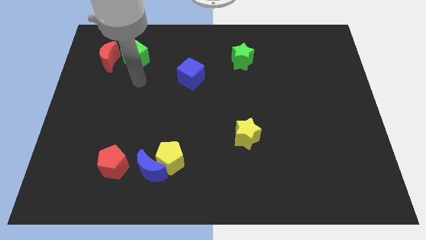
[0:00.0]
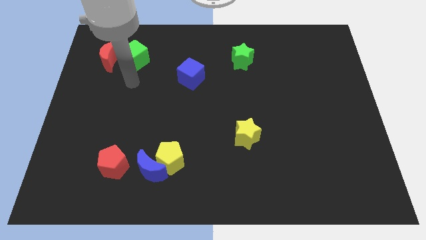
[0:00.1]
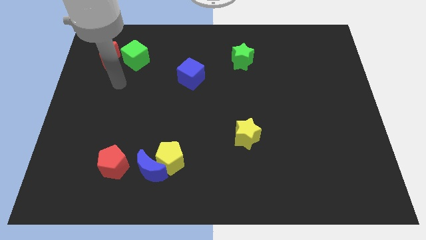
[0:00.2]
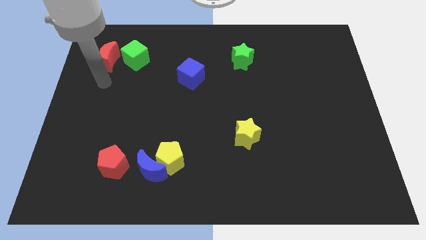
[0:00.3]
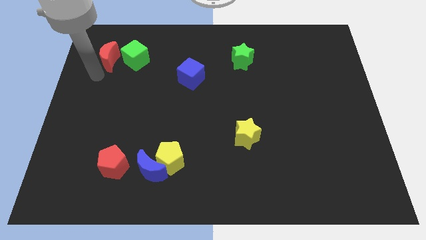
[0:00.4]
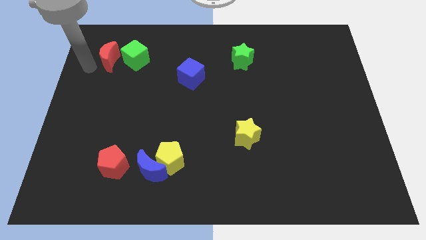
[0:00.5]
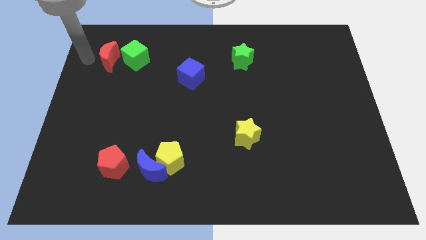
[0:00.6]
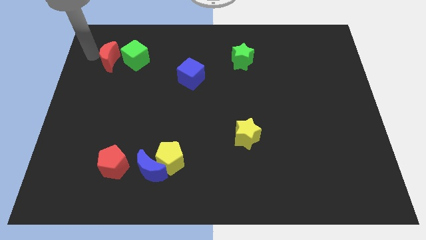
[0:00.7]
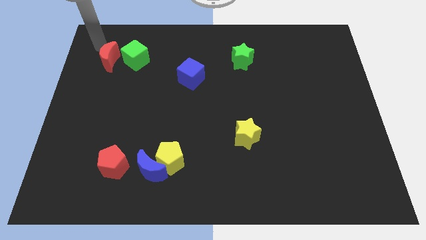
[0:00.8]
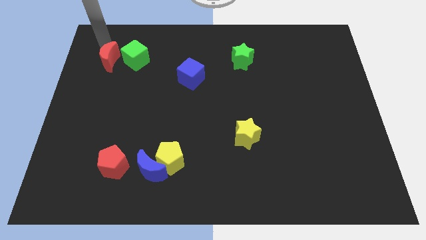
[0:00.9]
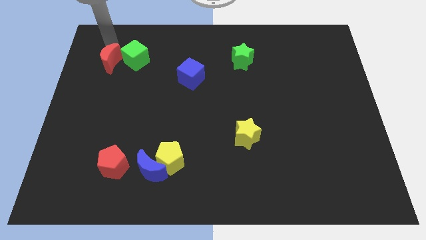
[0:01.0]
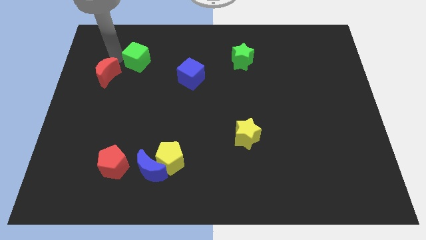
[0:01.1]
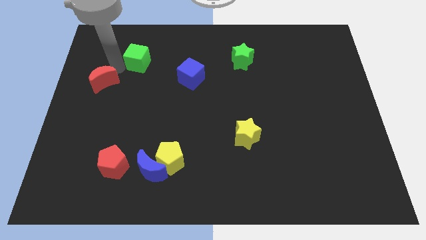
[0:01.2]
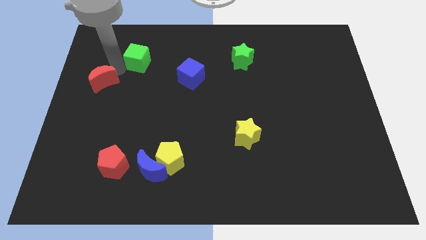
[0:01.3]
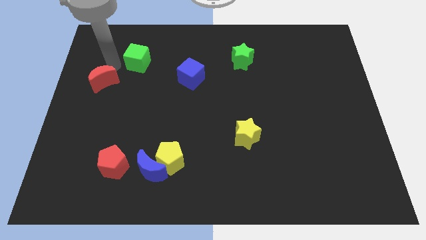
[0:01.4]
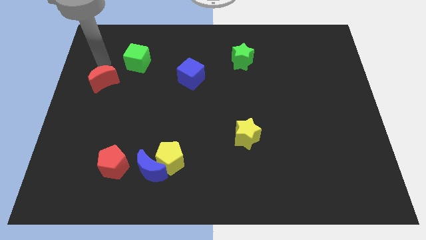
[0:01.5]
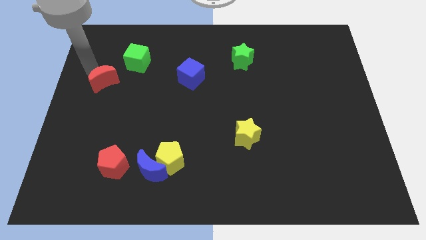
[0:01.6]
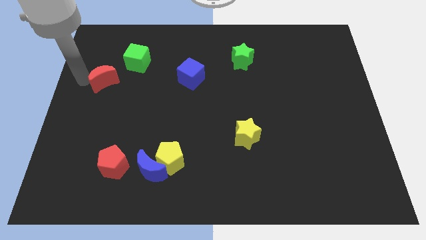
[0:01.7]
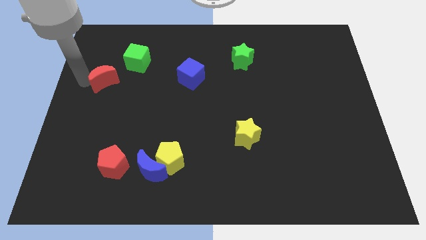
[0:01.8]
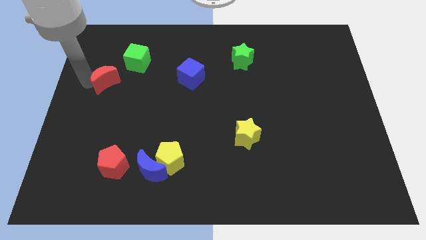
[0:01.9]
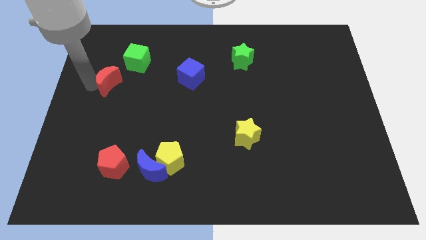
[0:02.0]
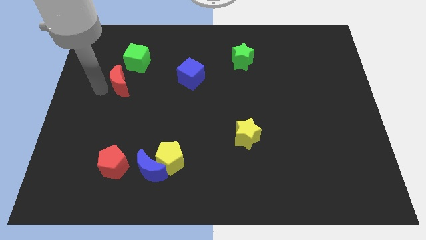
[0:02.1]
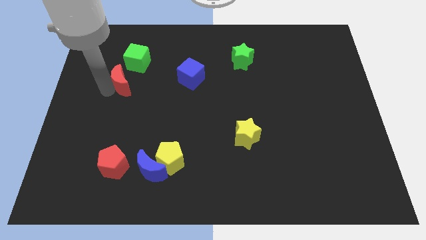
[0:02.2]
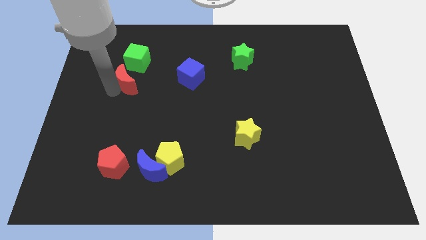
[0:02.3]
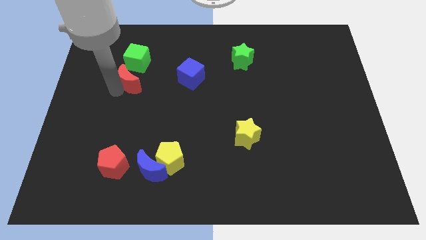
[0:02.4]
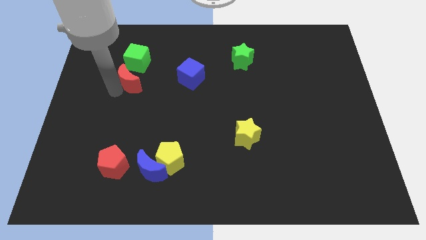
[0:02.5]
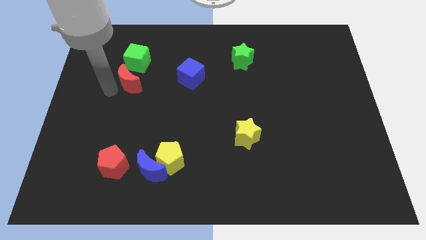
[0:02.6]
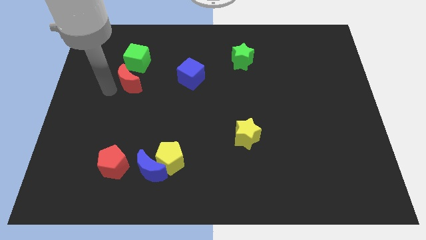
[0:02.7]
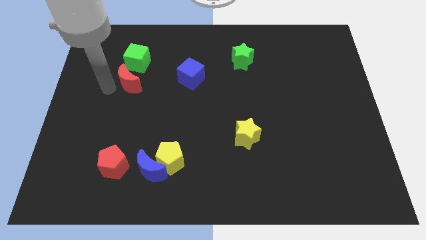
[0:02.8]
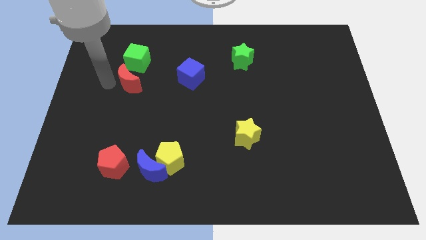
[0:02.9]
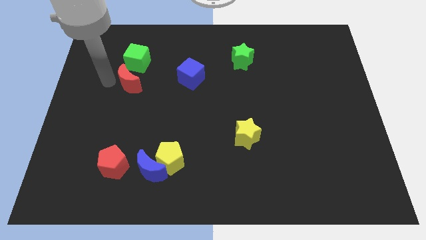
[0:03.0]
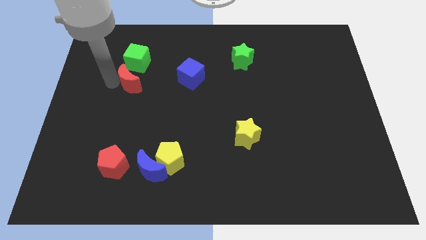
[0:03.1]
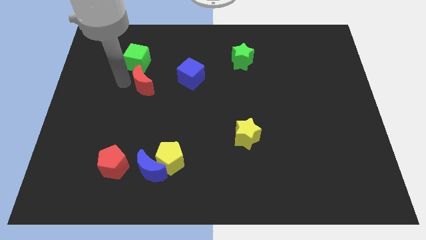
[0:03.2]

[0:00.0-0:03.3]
move the red crescent below the green cube

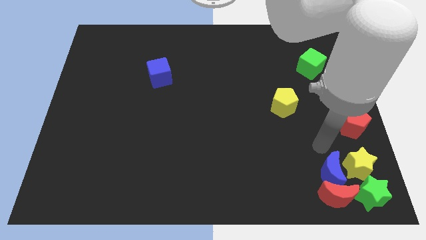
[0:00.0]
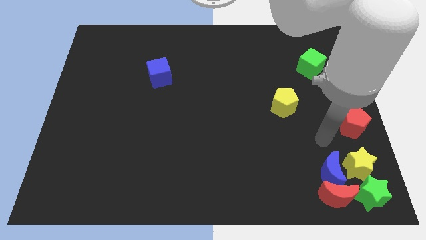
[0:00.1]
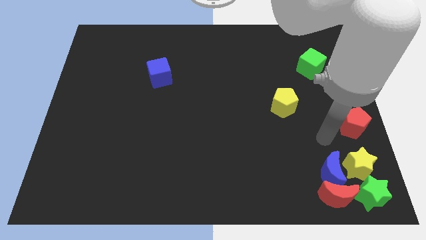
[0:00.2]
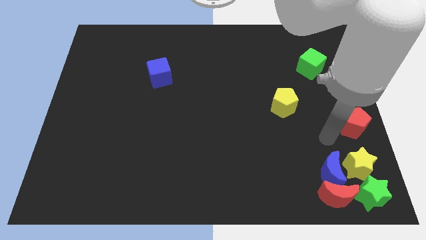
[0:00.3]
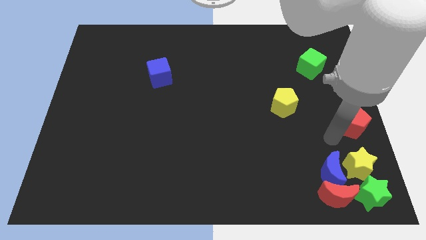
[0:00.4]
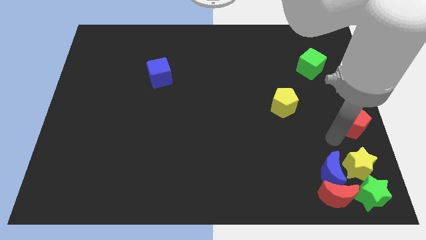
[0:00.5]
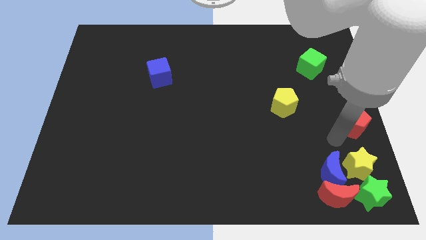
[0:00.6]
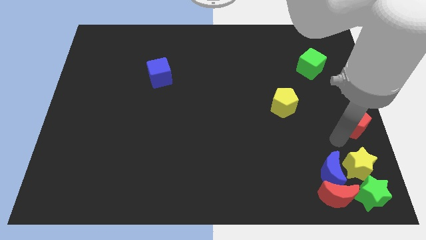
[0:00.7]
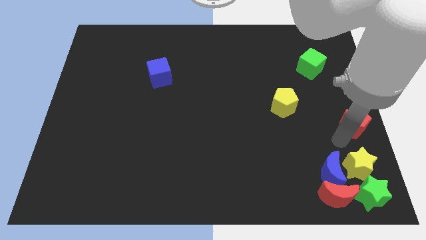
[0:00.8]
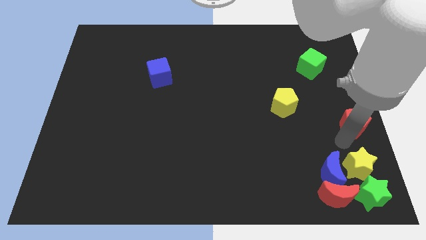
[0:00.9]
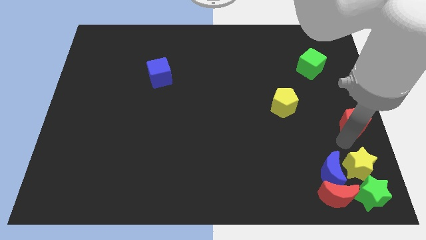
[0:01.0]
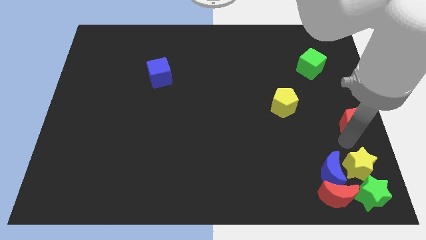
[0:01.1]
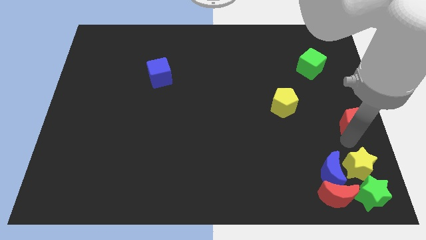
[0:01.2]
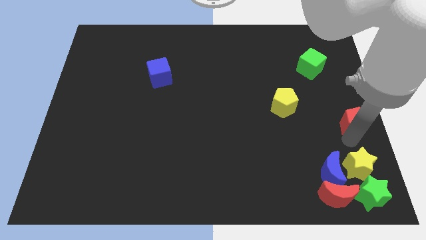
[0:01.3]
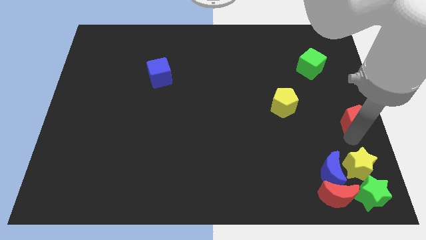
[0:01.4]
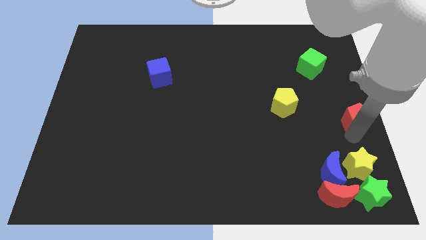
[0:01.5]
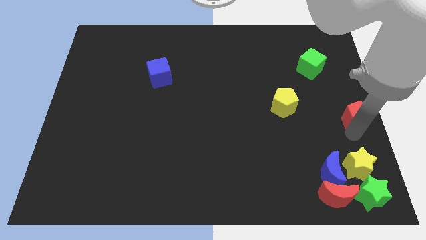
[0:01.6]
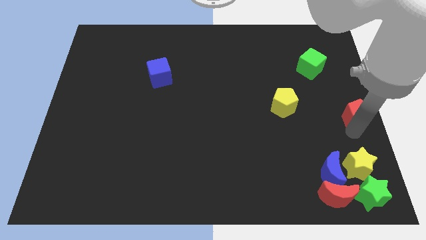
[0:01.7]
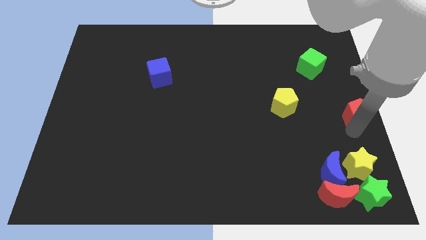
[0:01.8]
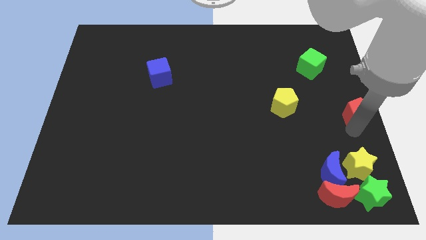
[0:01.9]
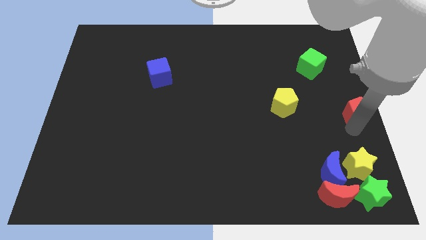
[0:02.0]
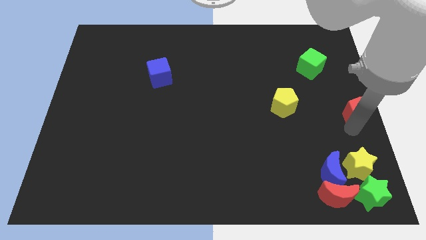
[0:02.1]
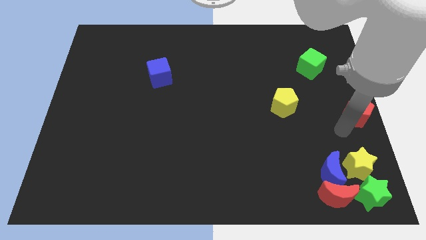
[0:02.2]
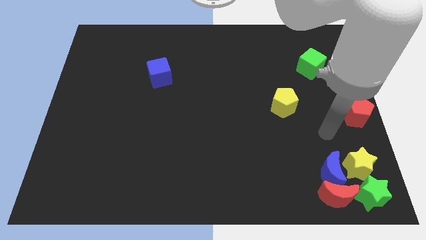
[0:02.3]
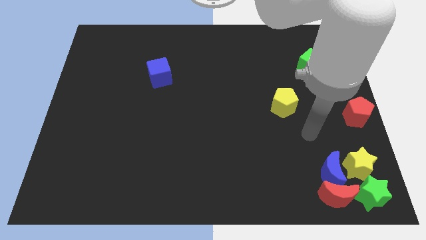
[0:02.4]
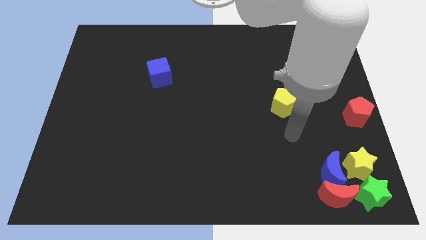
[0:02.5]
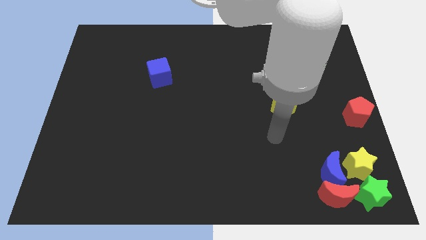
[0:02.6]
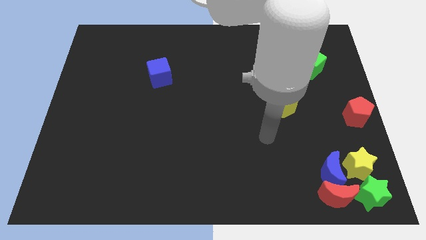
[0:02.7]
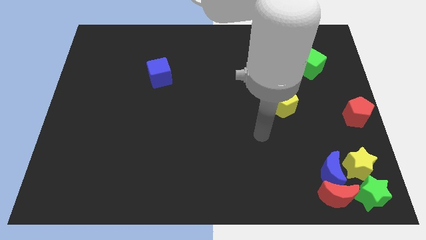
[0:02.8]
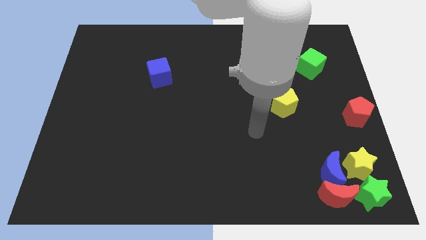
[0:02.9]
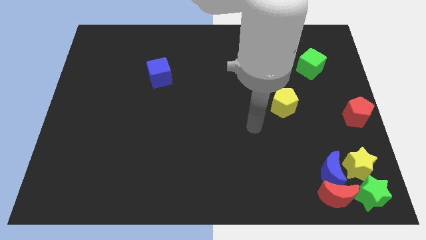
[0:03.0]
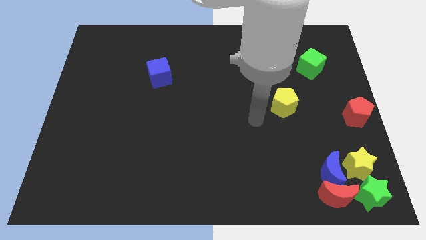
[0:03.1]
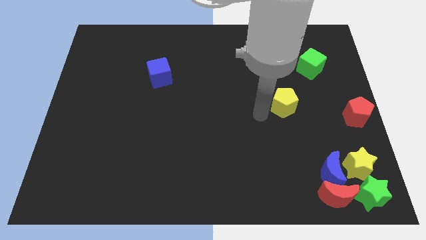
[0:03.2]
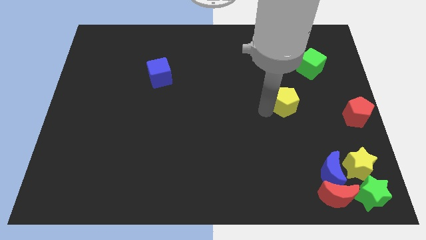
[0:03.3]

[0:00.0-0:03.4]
place the red pentagon towards the center right corner of the board

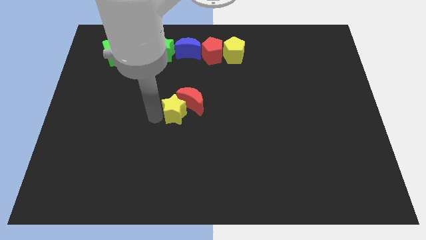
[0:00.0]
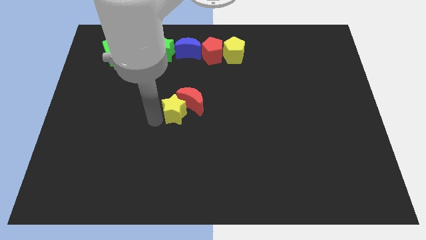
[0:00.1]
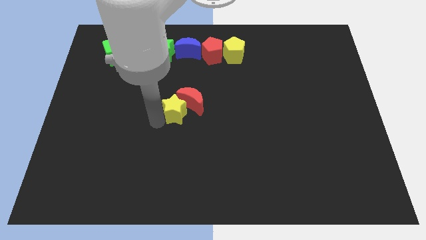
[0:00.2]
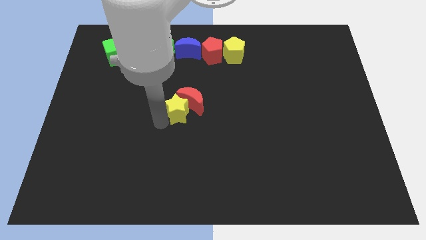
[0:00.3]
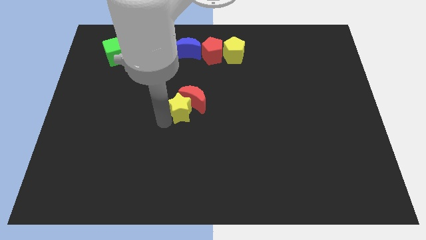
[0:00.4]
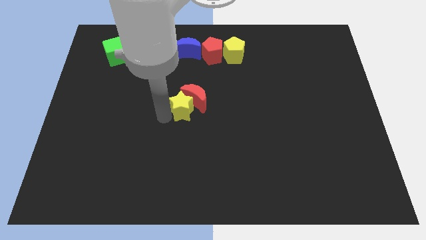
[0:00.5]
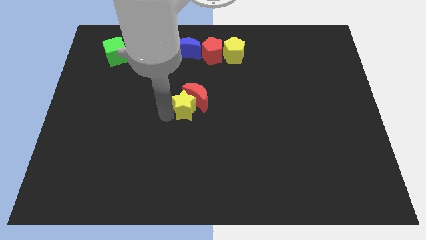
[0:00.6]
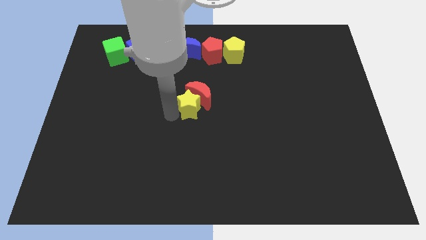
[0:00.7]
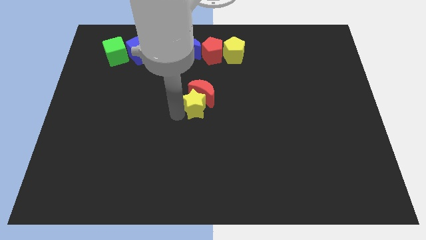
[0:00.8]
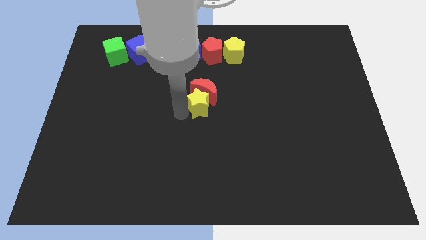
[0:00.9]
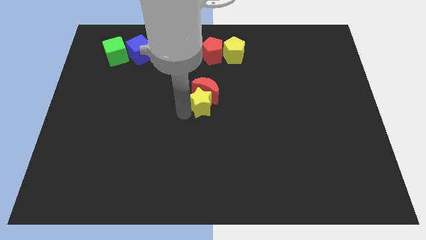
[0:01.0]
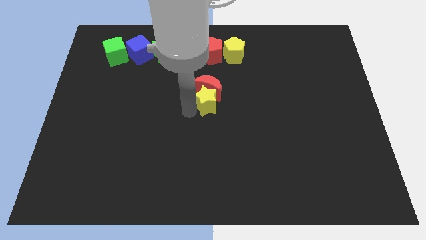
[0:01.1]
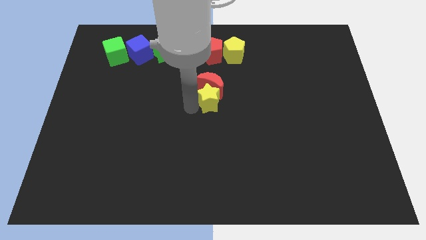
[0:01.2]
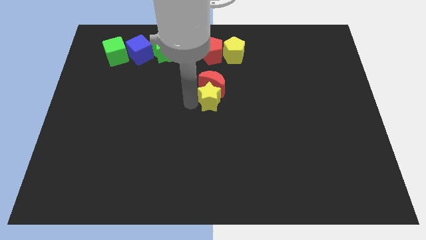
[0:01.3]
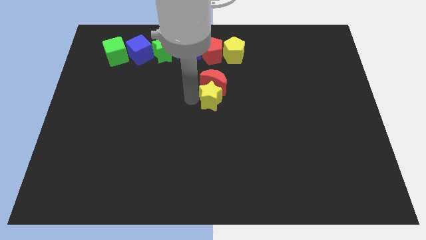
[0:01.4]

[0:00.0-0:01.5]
push yellow star along with red crescent to the top side of the board

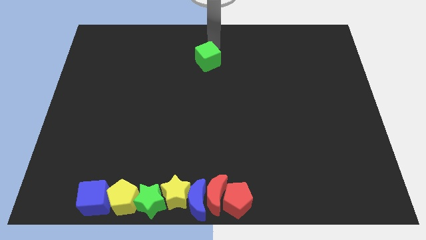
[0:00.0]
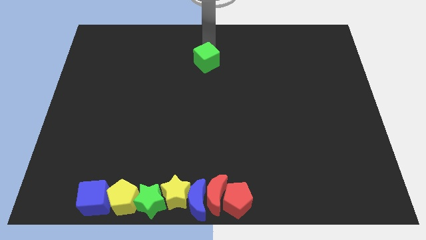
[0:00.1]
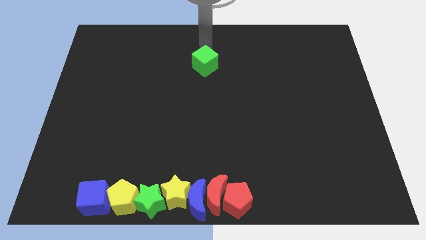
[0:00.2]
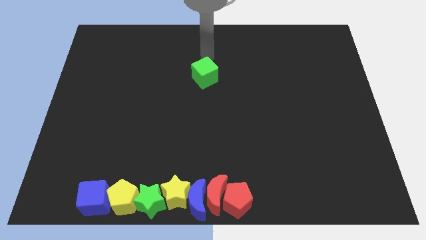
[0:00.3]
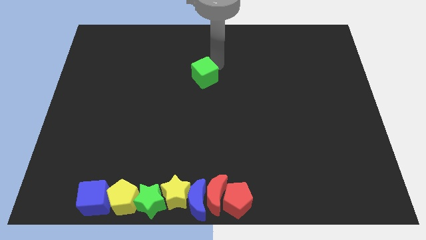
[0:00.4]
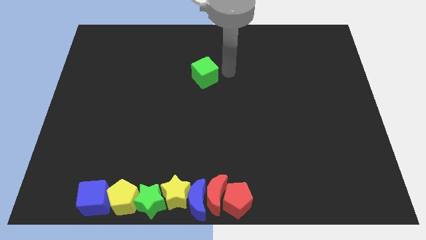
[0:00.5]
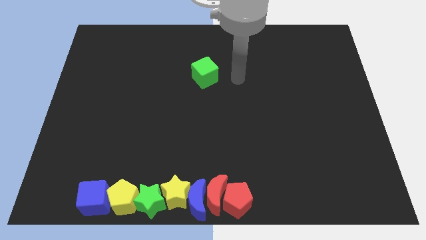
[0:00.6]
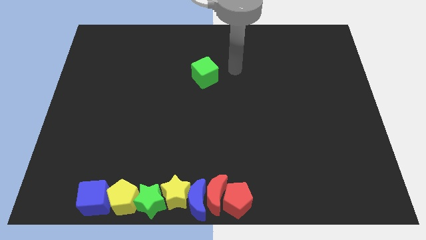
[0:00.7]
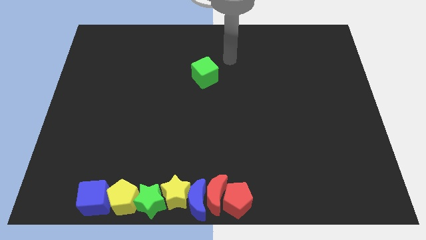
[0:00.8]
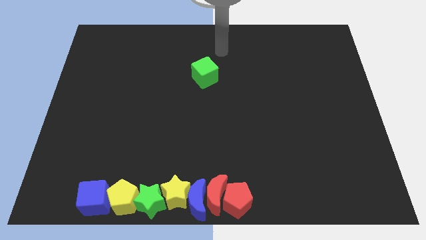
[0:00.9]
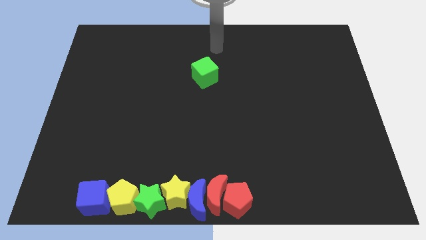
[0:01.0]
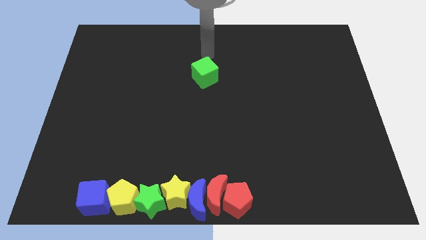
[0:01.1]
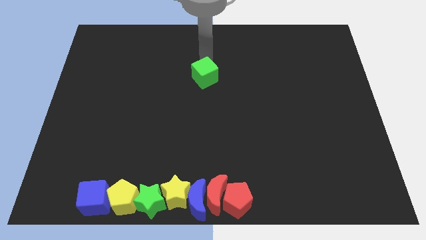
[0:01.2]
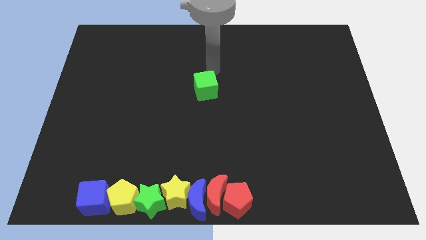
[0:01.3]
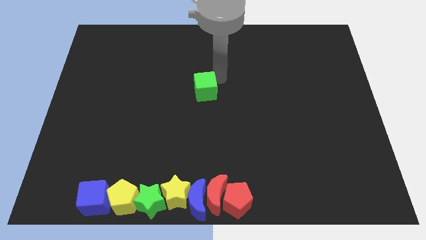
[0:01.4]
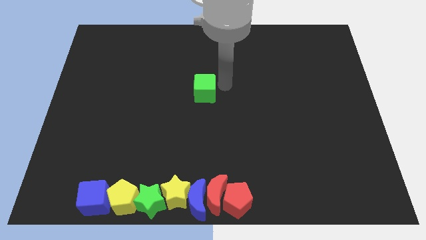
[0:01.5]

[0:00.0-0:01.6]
place the green cube towards the center of the board
